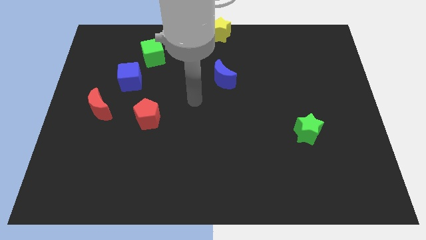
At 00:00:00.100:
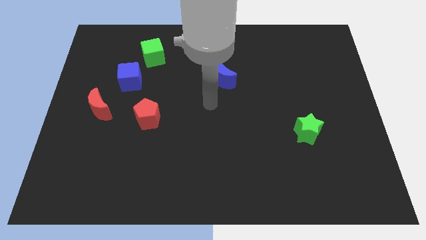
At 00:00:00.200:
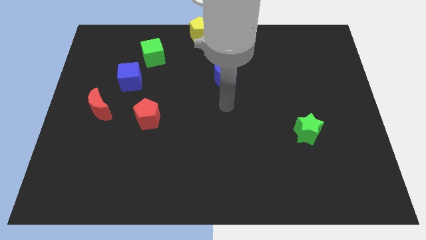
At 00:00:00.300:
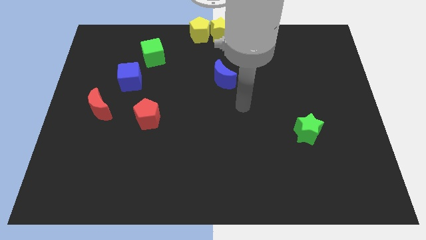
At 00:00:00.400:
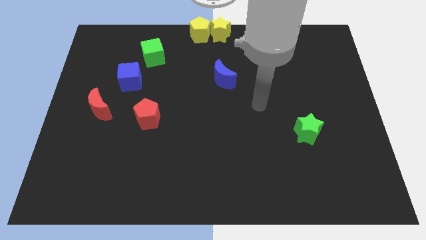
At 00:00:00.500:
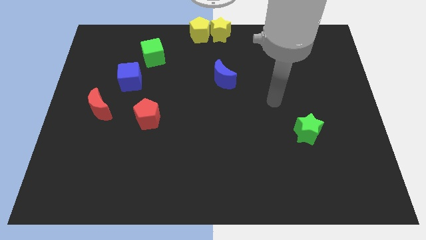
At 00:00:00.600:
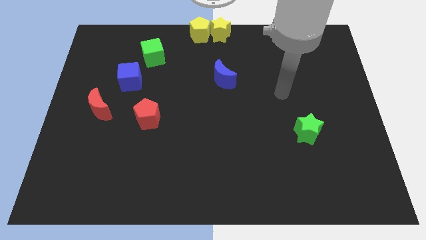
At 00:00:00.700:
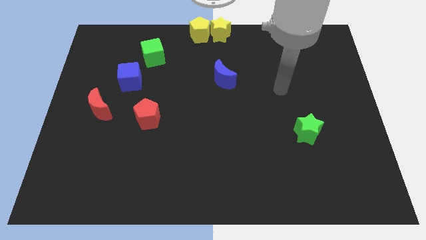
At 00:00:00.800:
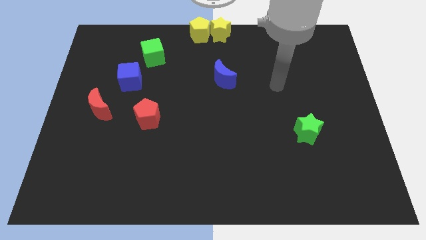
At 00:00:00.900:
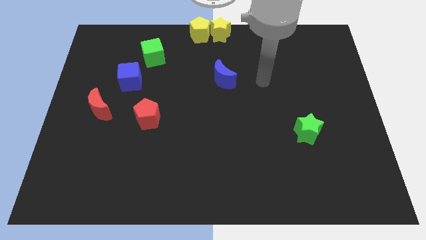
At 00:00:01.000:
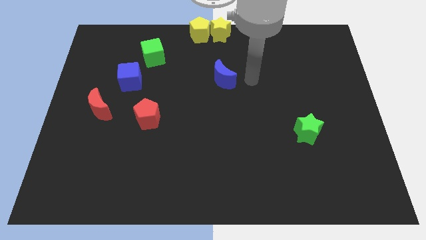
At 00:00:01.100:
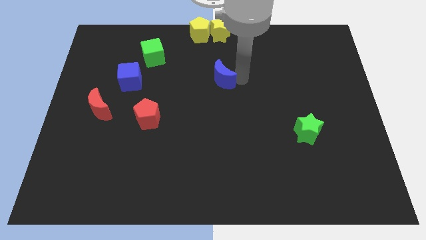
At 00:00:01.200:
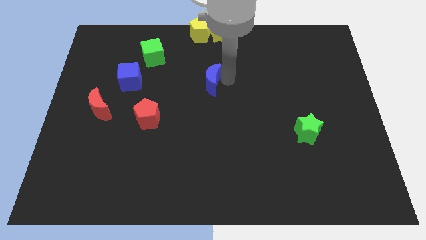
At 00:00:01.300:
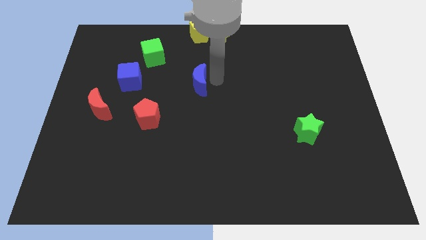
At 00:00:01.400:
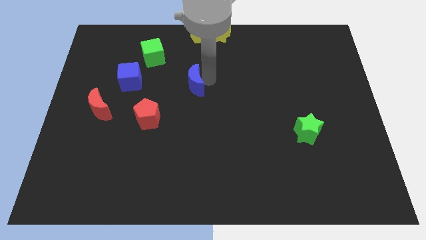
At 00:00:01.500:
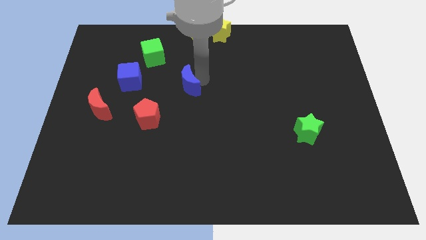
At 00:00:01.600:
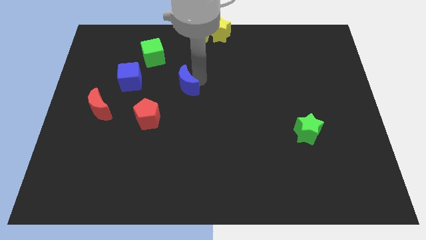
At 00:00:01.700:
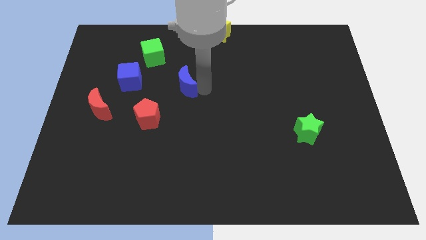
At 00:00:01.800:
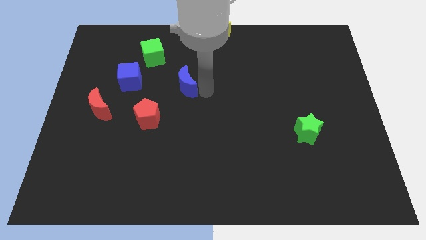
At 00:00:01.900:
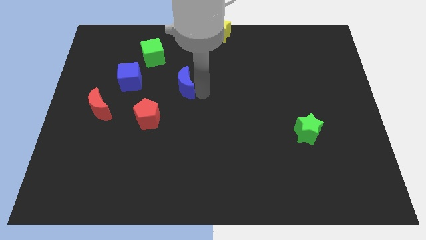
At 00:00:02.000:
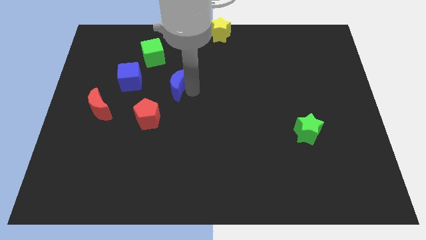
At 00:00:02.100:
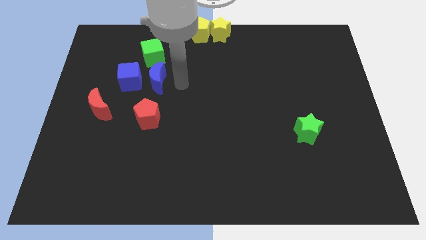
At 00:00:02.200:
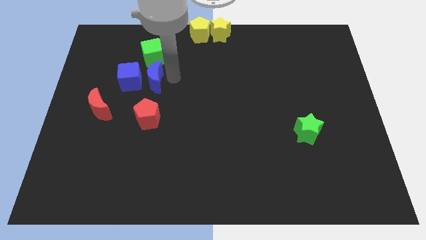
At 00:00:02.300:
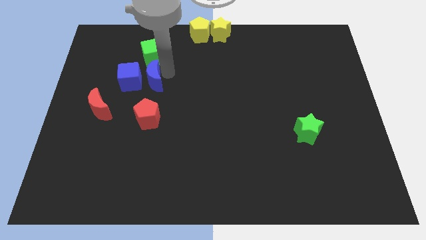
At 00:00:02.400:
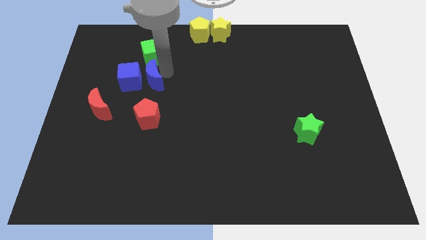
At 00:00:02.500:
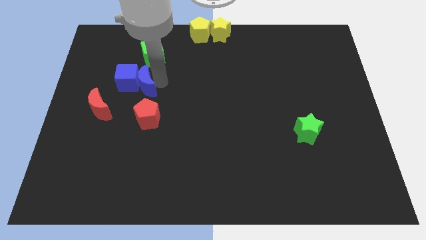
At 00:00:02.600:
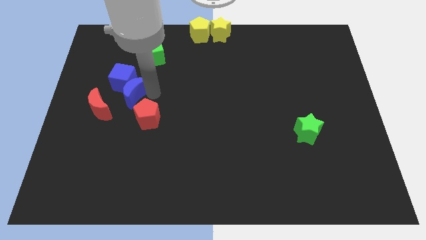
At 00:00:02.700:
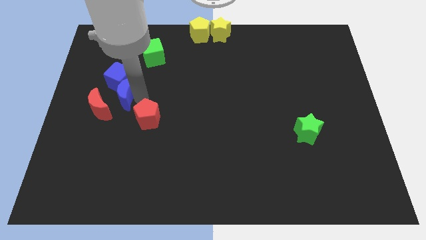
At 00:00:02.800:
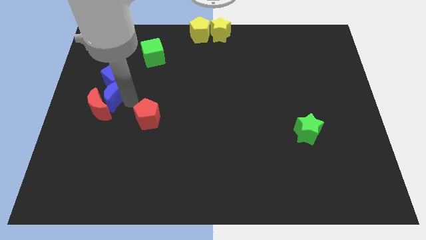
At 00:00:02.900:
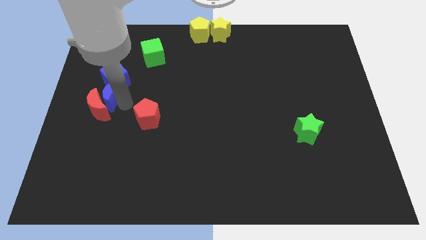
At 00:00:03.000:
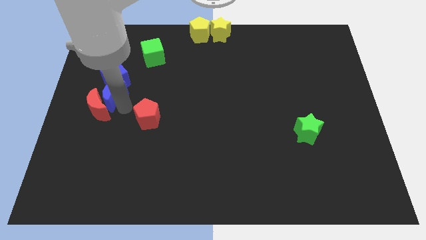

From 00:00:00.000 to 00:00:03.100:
move blue moon below the blue cube

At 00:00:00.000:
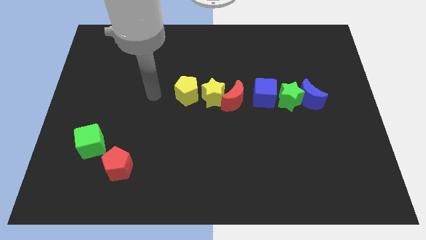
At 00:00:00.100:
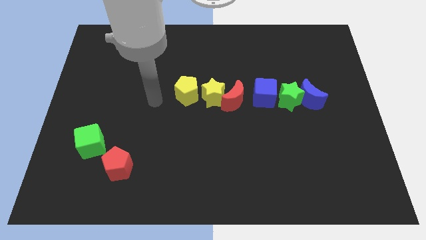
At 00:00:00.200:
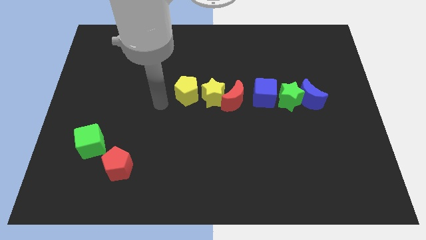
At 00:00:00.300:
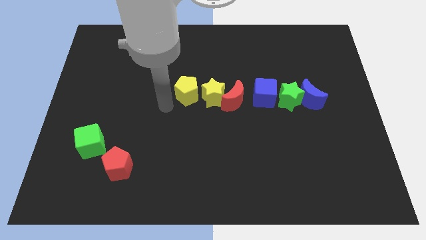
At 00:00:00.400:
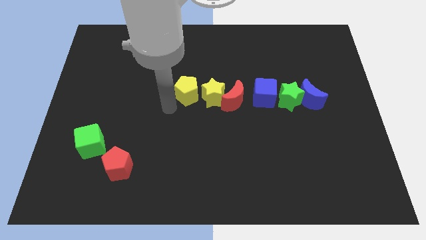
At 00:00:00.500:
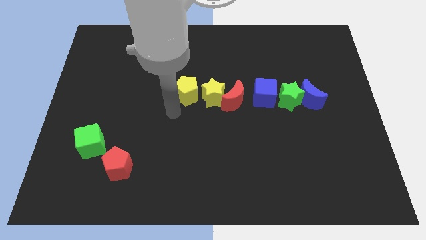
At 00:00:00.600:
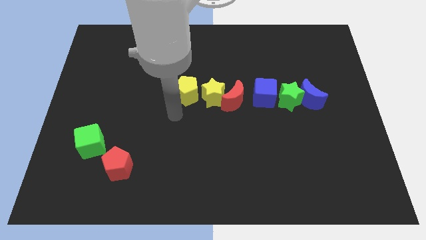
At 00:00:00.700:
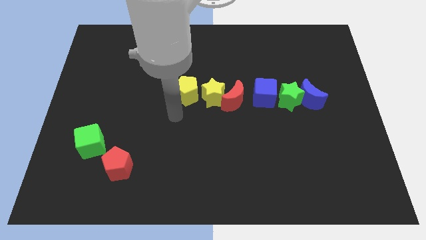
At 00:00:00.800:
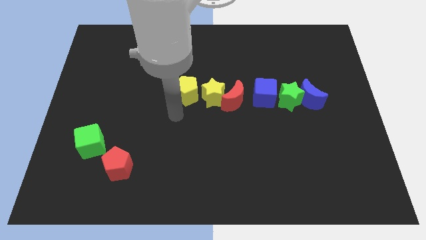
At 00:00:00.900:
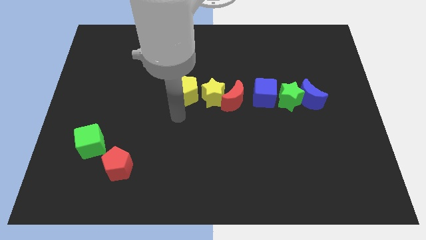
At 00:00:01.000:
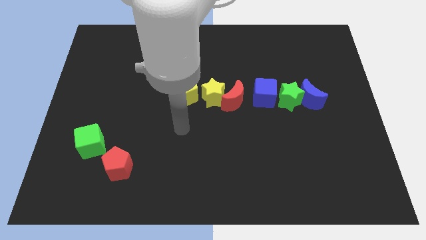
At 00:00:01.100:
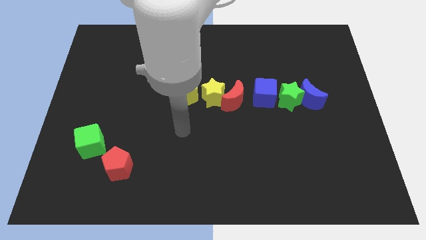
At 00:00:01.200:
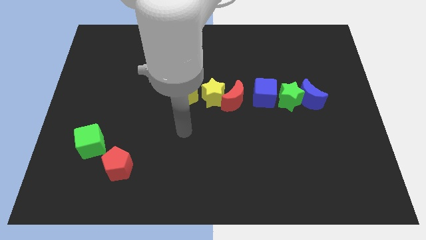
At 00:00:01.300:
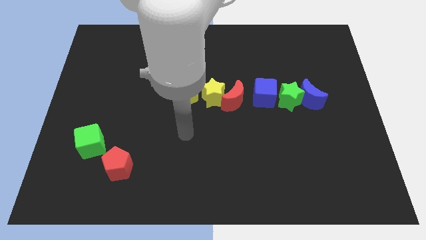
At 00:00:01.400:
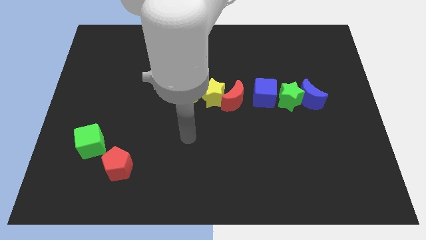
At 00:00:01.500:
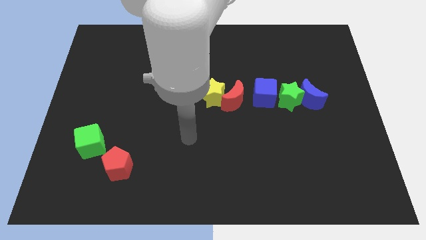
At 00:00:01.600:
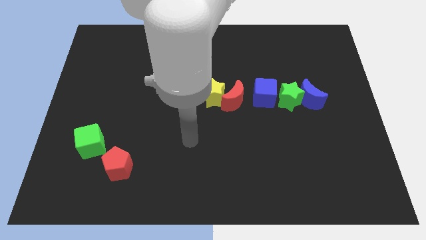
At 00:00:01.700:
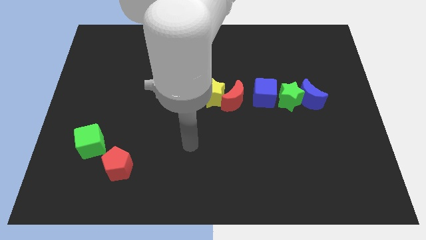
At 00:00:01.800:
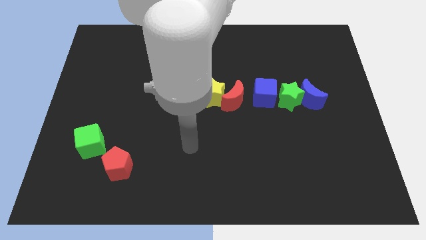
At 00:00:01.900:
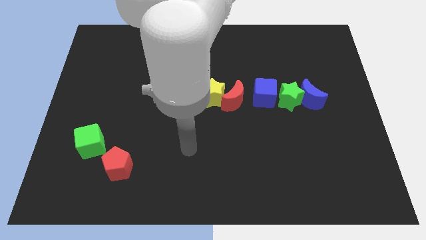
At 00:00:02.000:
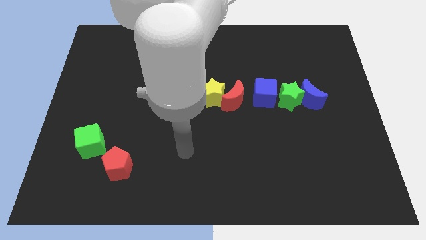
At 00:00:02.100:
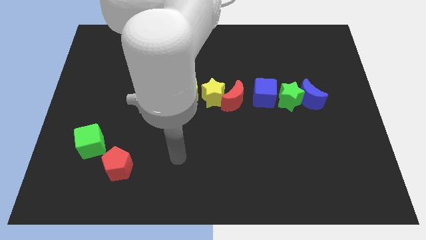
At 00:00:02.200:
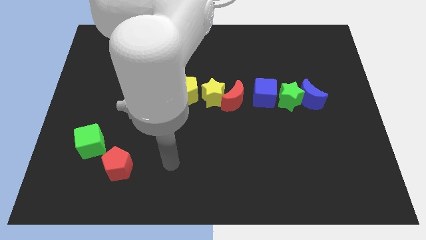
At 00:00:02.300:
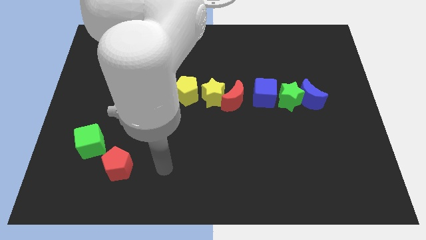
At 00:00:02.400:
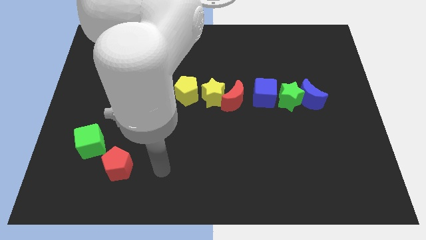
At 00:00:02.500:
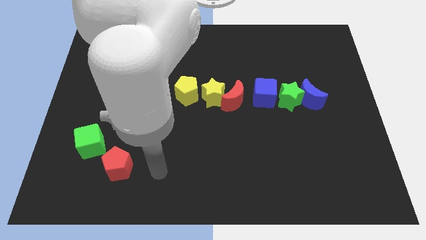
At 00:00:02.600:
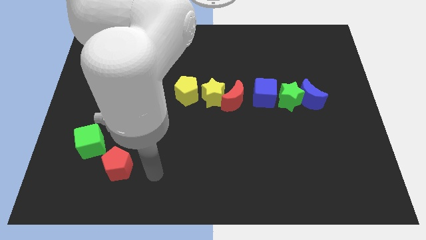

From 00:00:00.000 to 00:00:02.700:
move your arm to the right of the red pentagon

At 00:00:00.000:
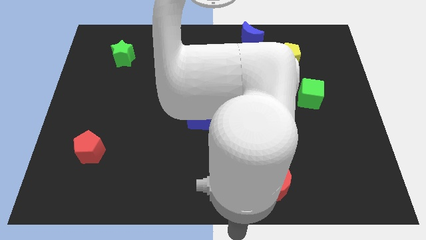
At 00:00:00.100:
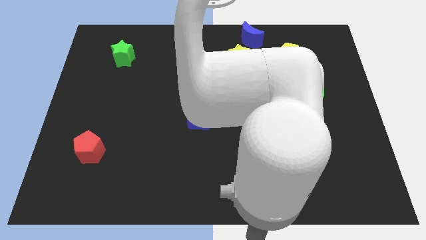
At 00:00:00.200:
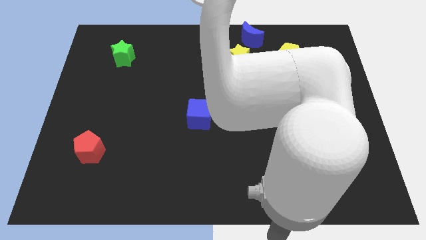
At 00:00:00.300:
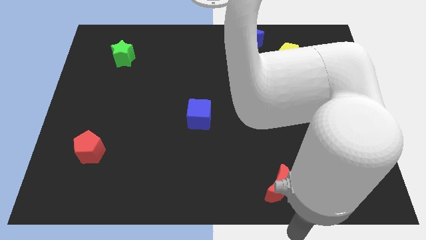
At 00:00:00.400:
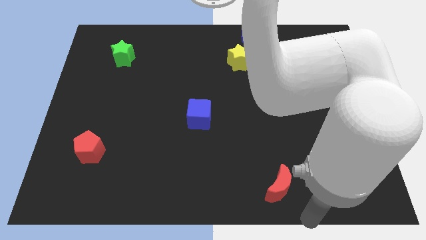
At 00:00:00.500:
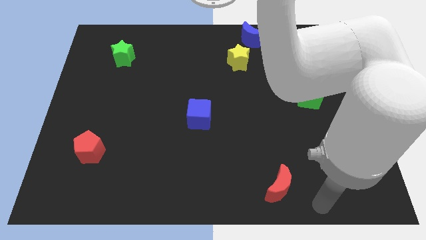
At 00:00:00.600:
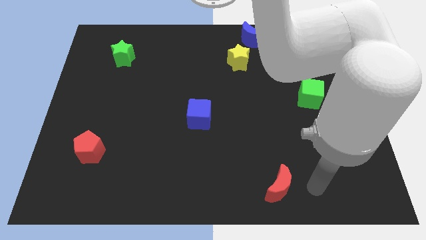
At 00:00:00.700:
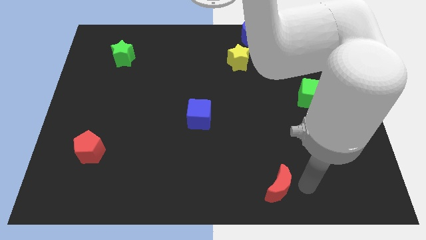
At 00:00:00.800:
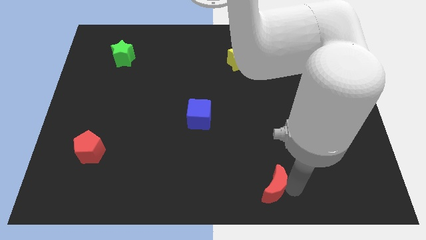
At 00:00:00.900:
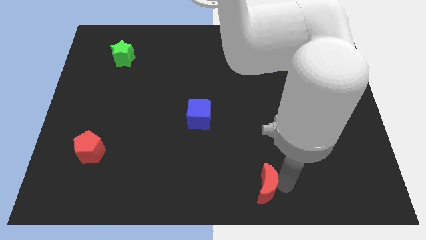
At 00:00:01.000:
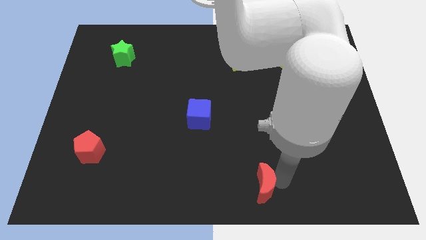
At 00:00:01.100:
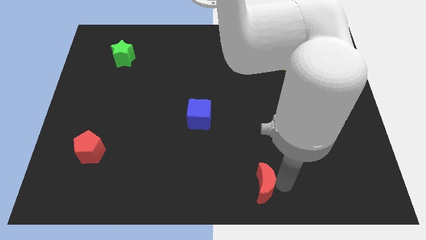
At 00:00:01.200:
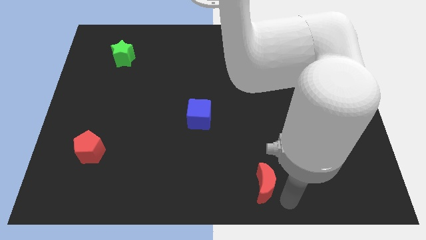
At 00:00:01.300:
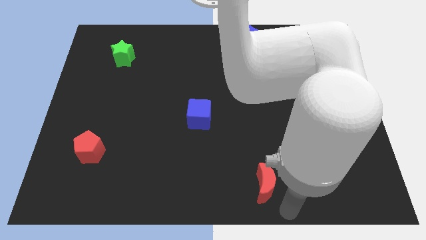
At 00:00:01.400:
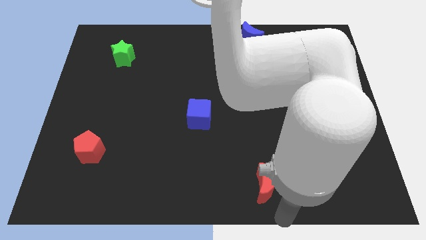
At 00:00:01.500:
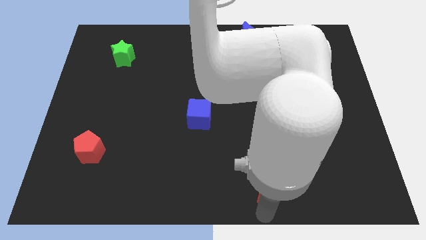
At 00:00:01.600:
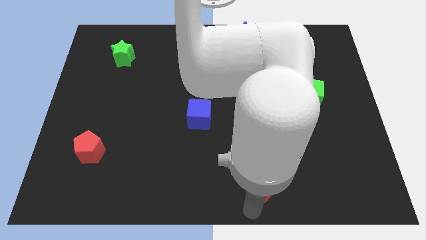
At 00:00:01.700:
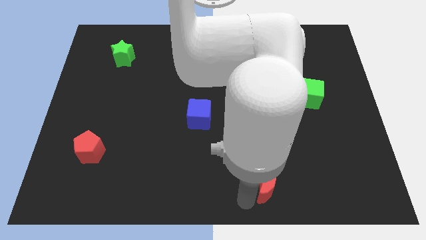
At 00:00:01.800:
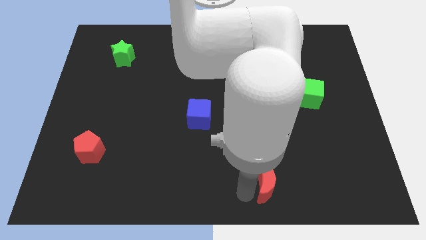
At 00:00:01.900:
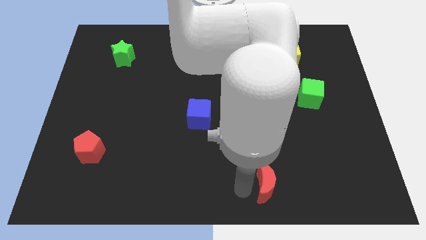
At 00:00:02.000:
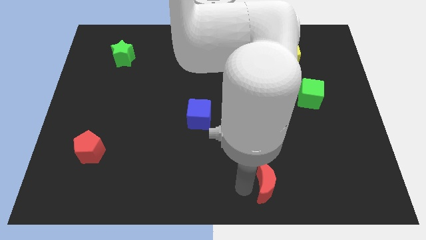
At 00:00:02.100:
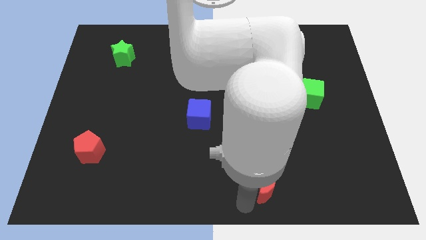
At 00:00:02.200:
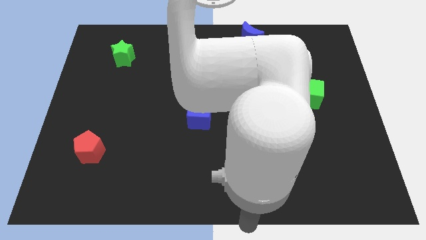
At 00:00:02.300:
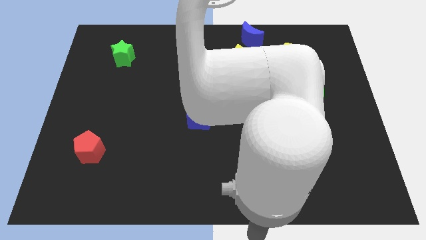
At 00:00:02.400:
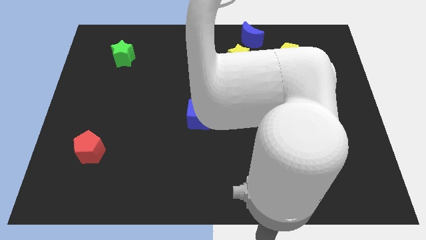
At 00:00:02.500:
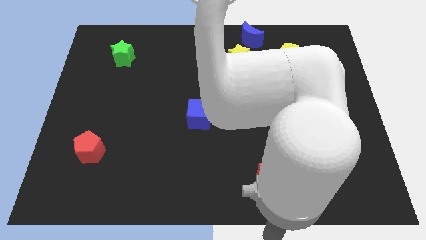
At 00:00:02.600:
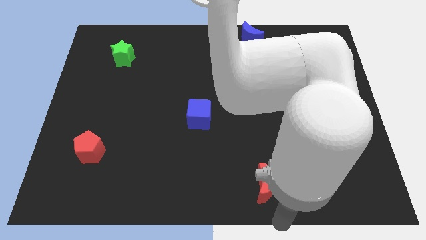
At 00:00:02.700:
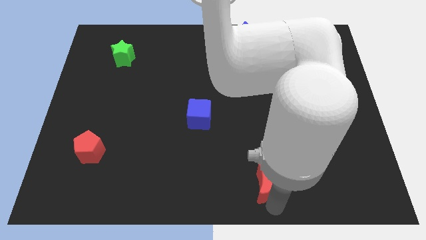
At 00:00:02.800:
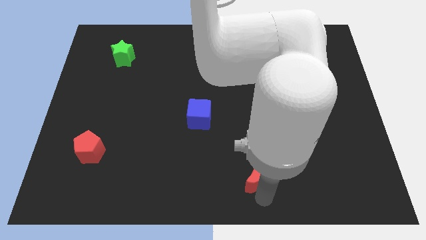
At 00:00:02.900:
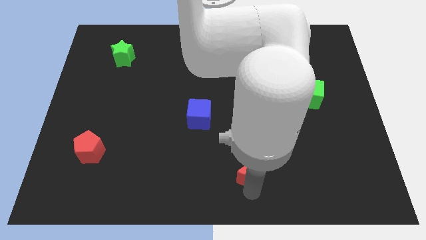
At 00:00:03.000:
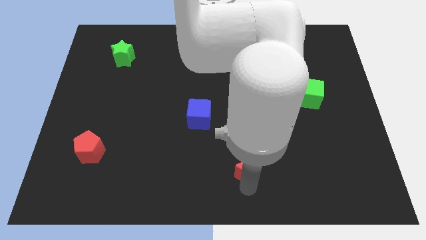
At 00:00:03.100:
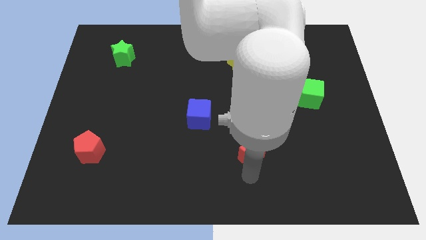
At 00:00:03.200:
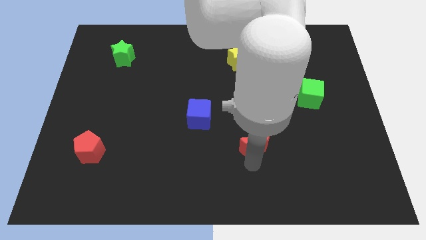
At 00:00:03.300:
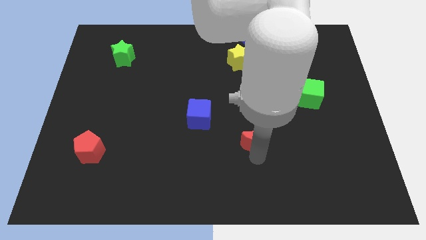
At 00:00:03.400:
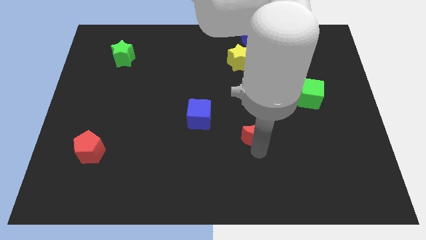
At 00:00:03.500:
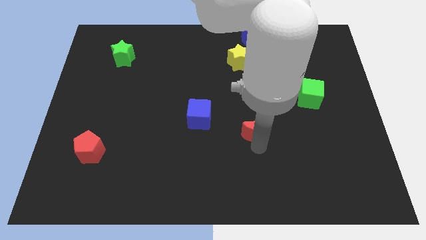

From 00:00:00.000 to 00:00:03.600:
move the red moon to the right side of the blue cube
